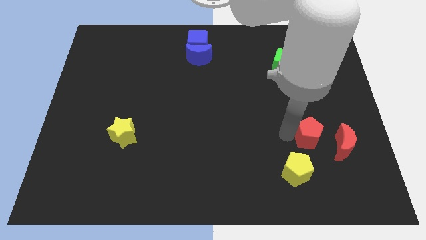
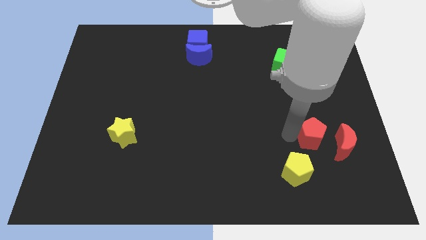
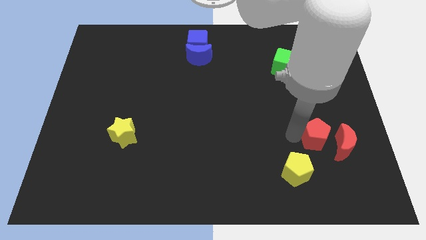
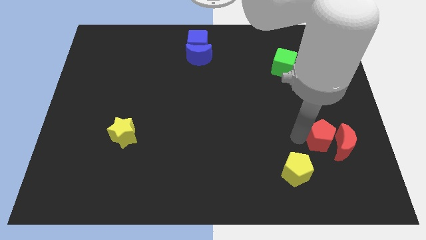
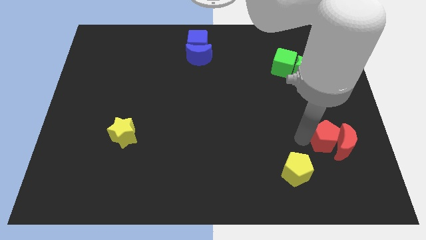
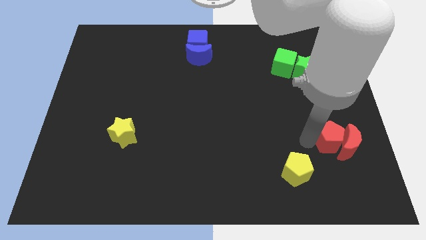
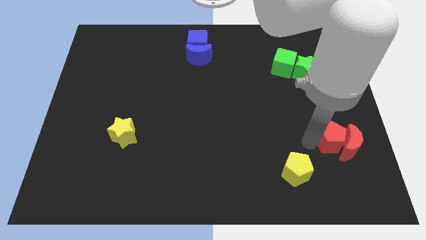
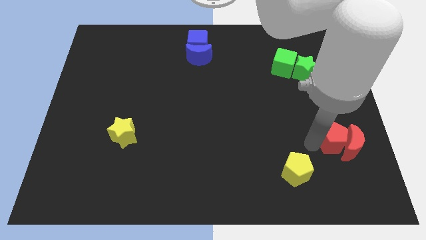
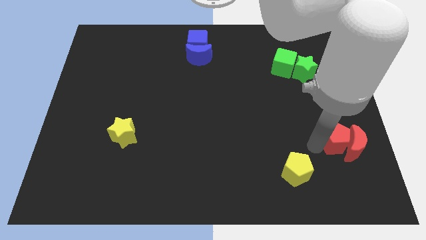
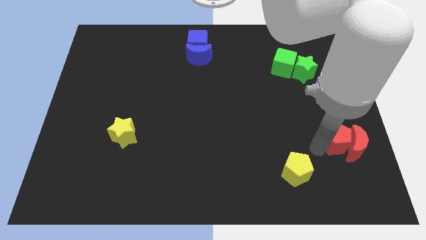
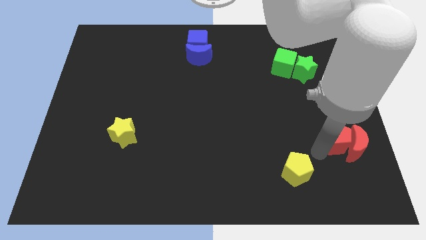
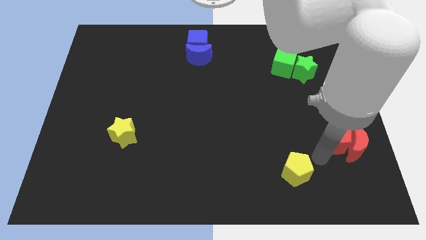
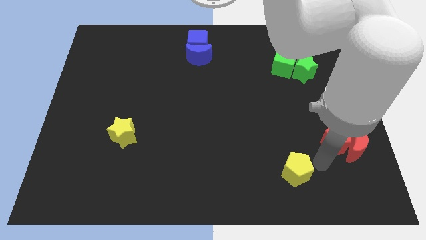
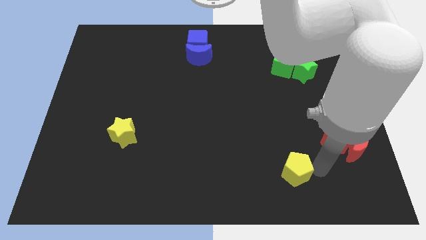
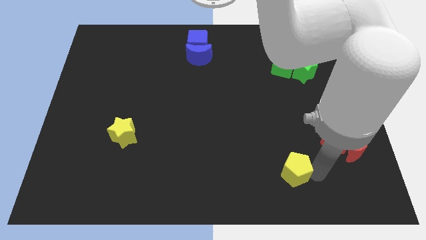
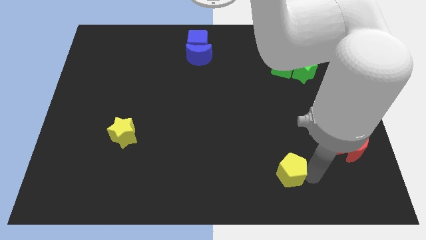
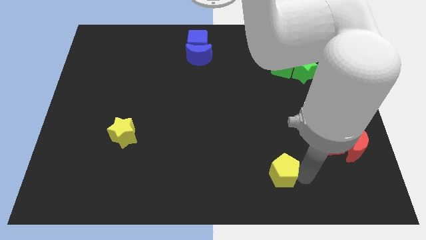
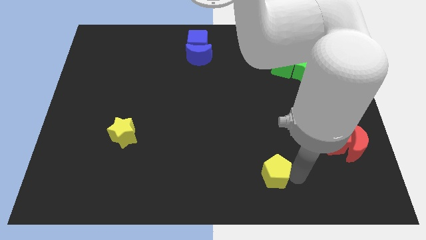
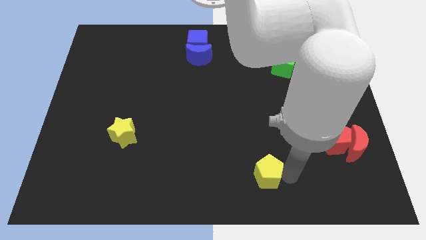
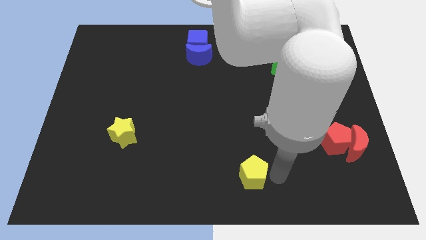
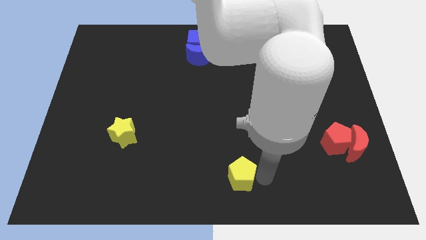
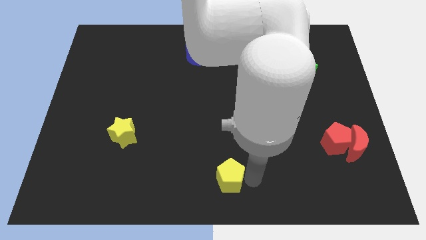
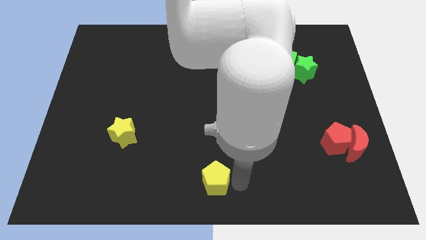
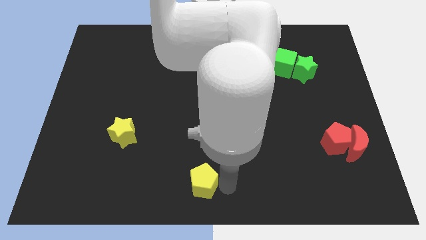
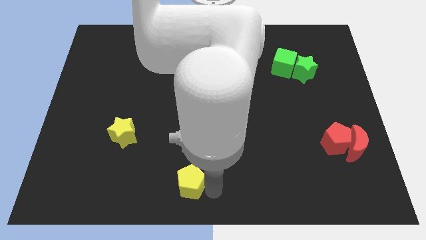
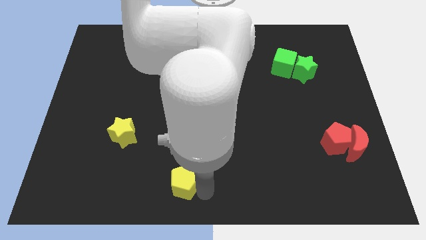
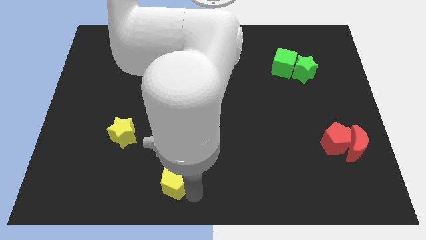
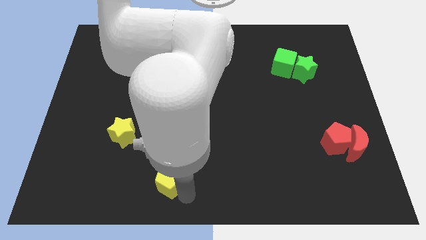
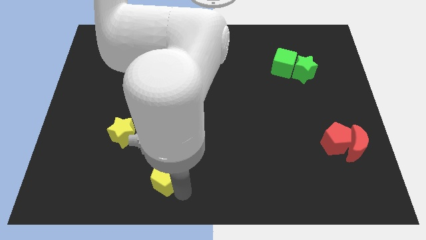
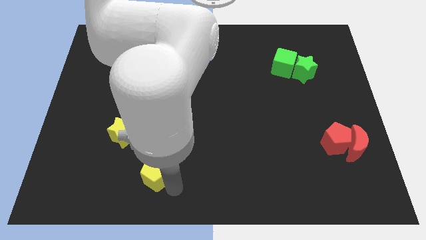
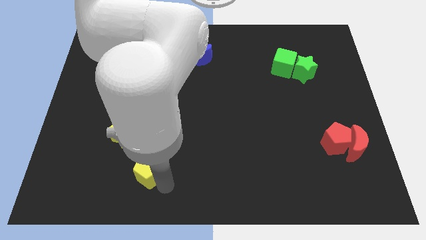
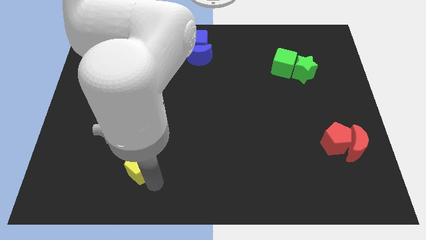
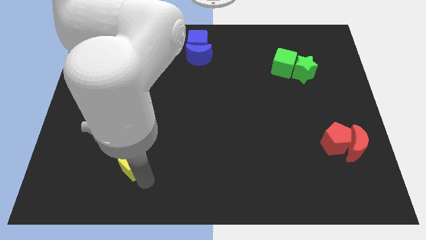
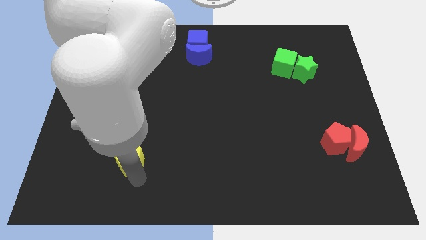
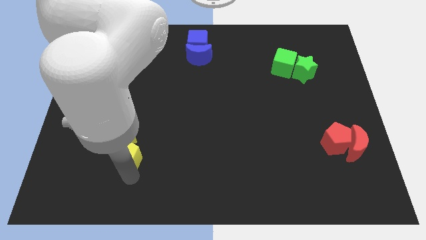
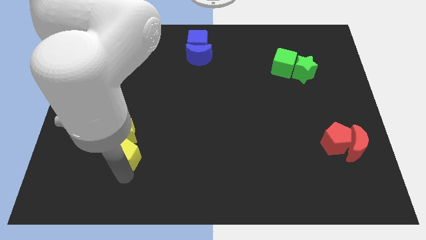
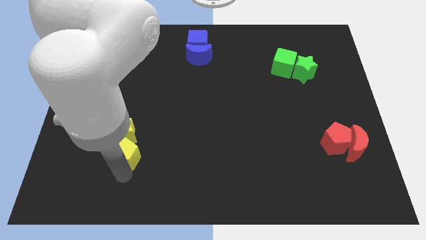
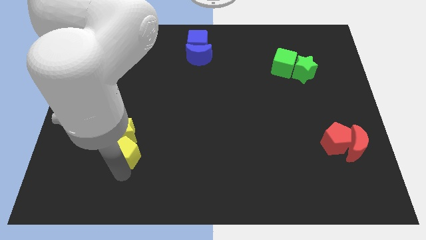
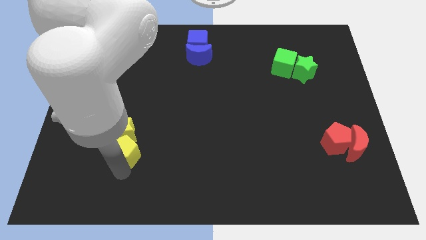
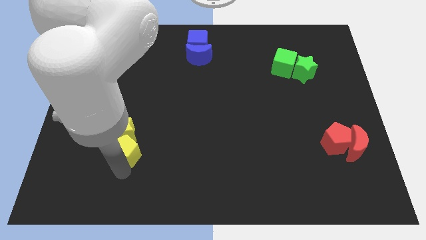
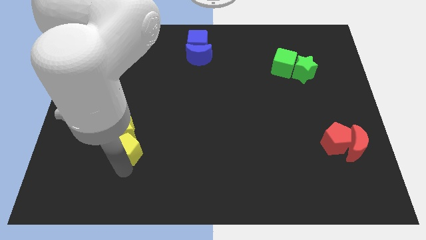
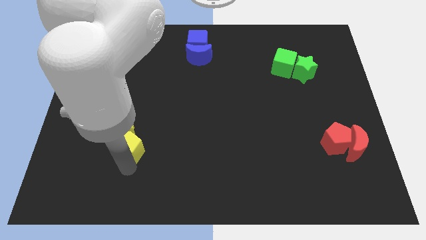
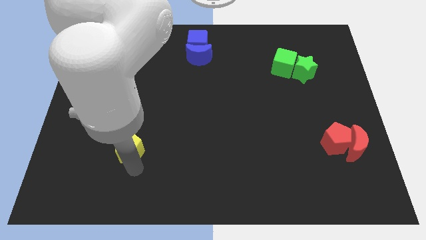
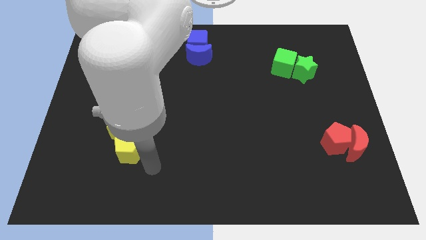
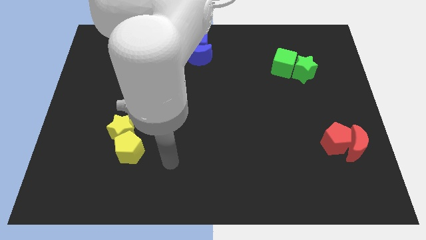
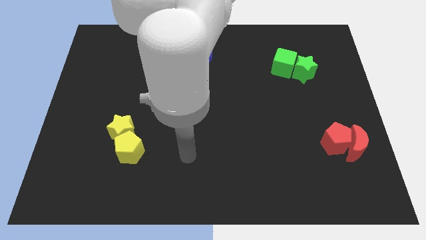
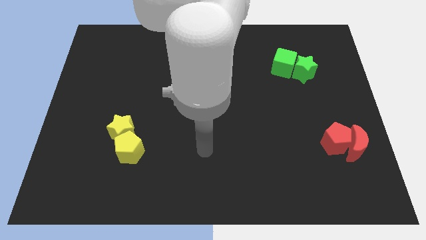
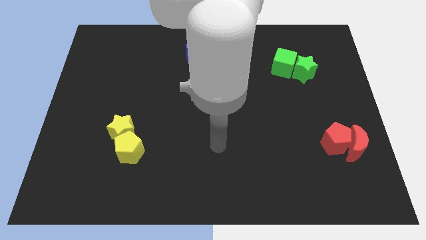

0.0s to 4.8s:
separate yellow pentagon from red pentagon

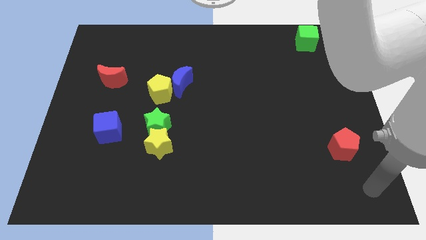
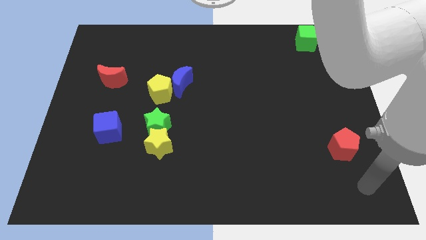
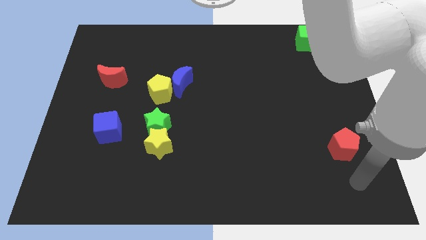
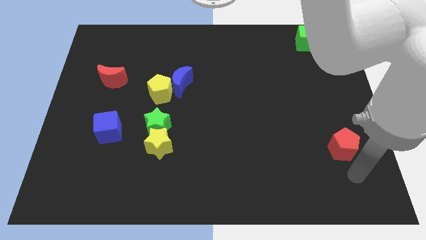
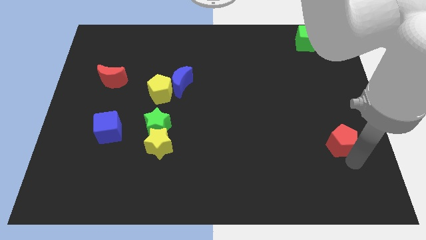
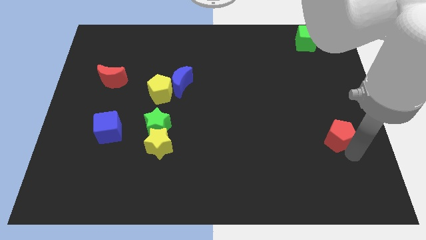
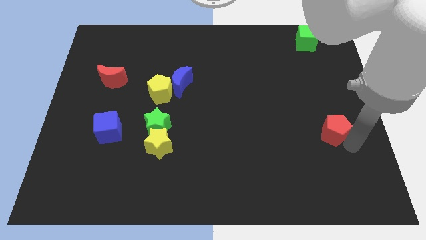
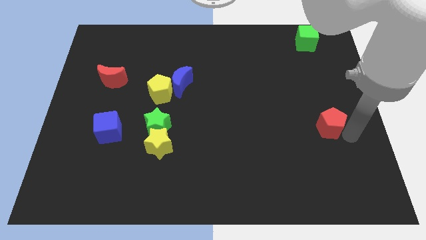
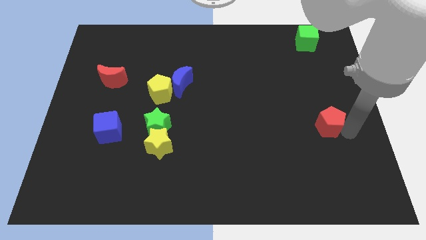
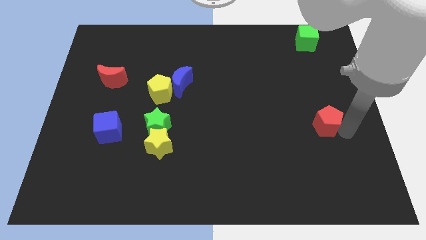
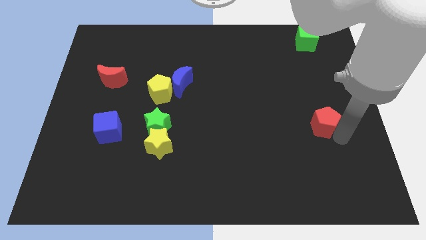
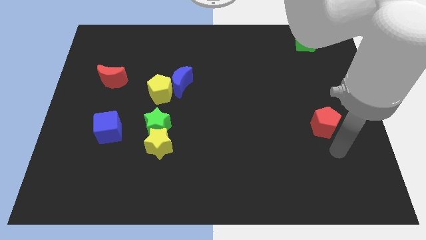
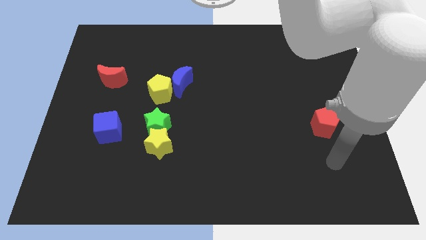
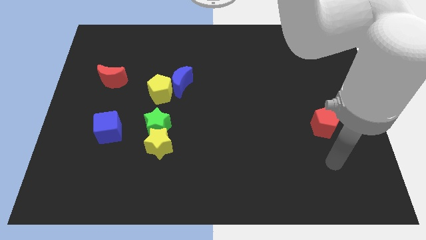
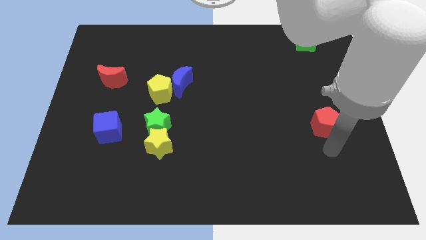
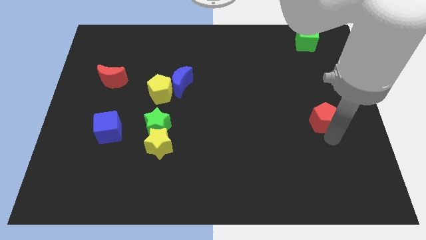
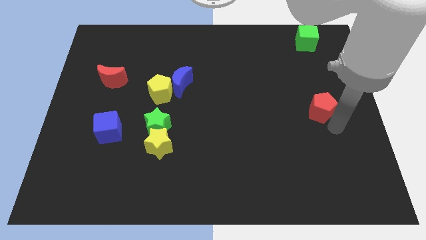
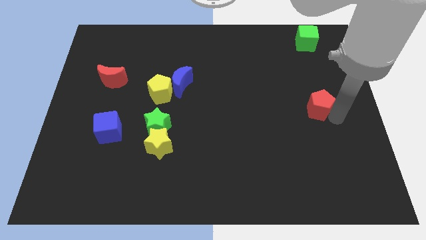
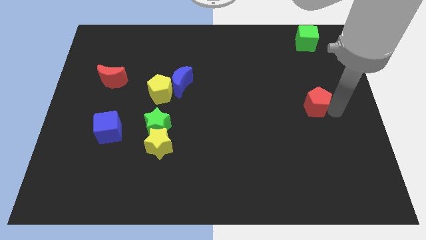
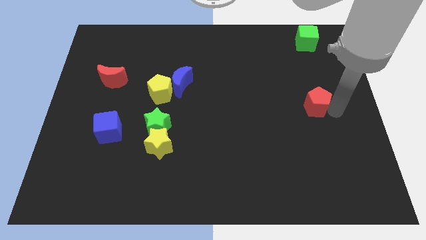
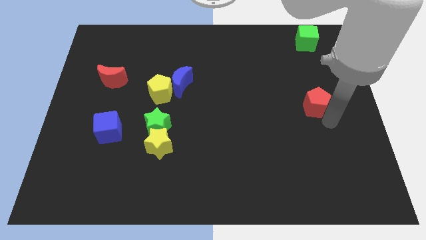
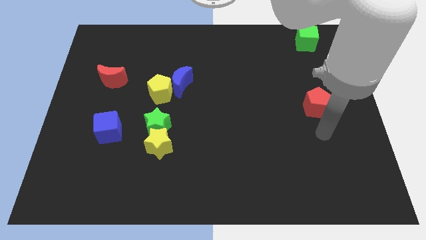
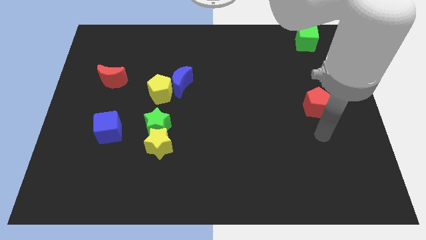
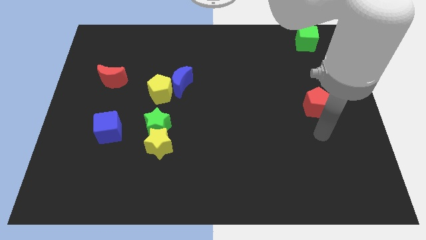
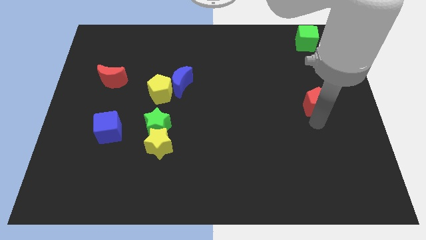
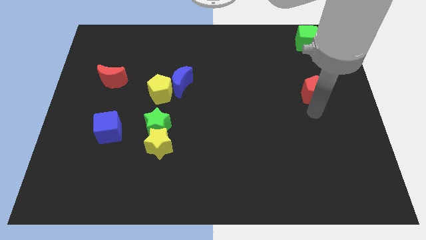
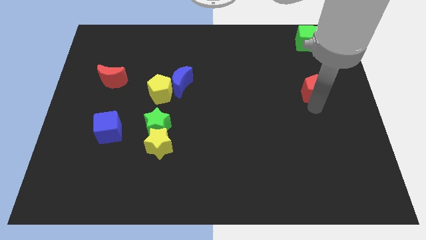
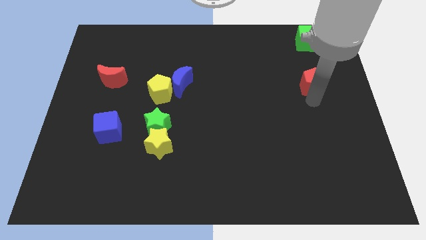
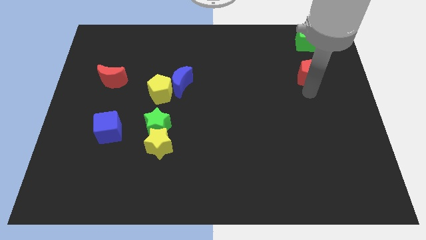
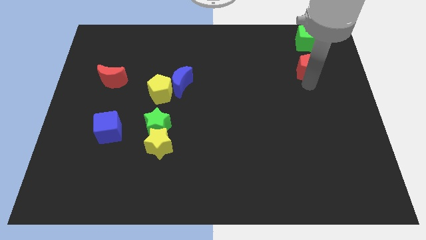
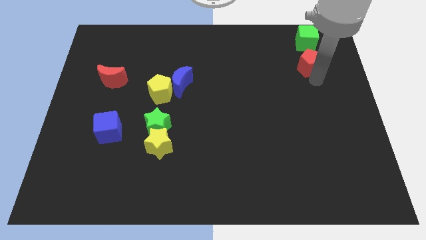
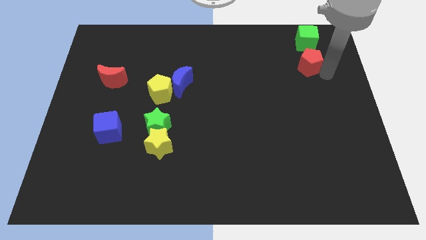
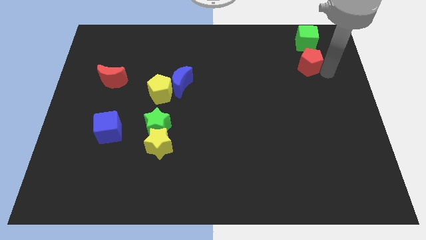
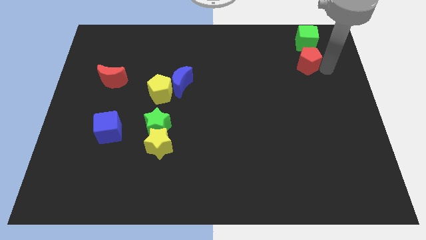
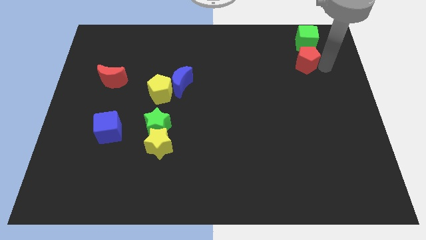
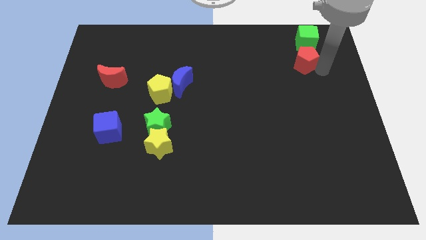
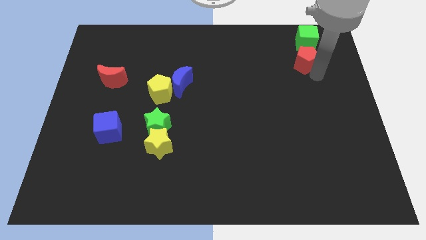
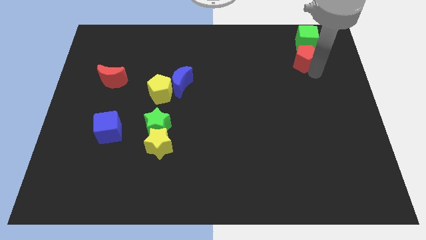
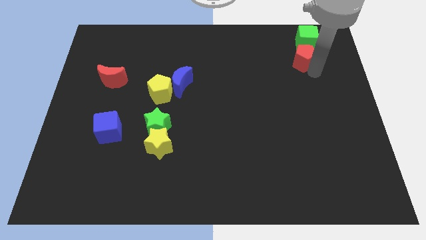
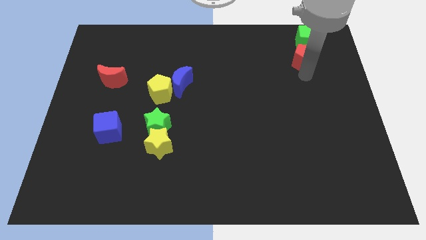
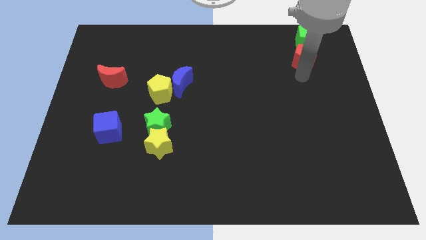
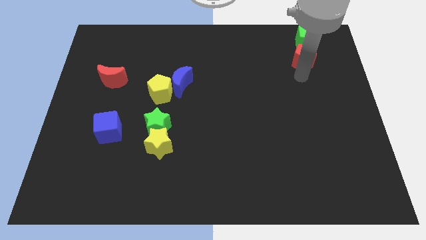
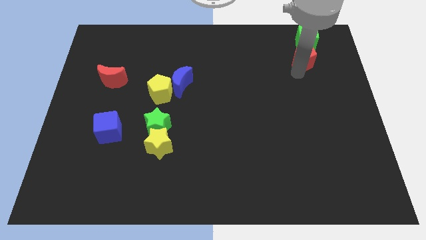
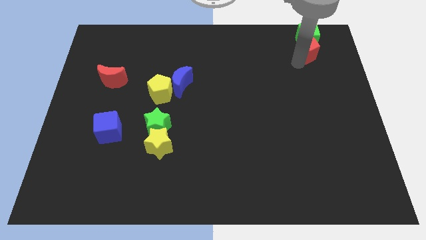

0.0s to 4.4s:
move the red pentagon into the green cube
